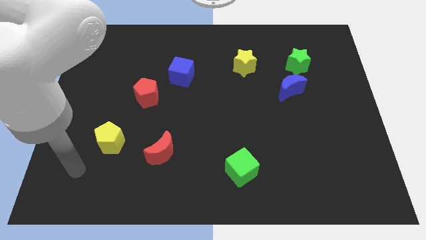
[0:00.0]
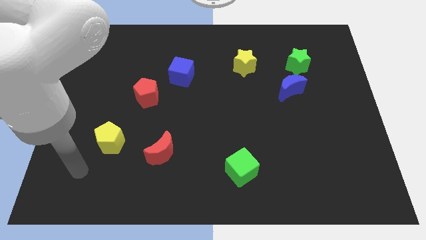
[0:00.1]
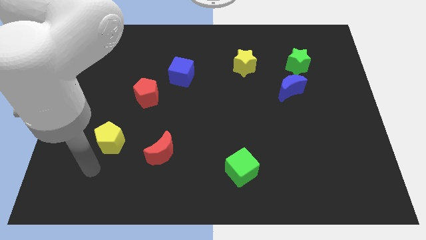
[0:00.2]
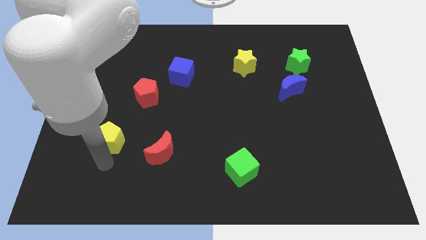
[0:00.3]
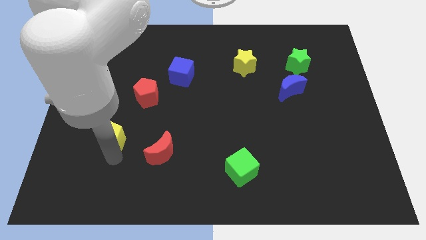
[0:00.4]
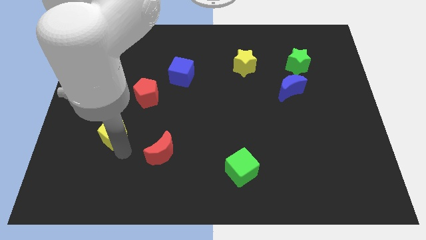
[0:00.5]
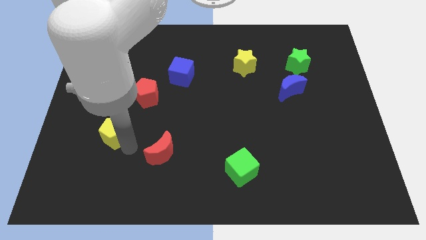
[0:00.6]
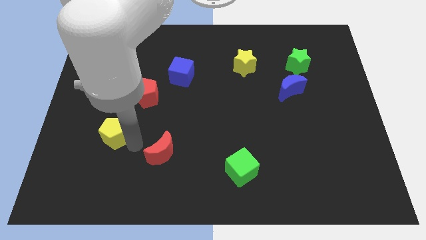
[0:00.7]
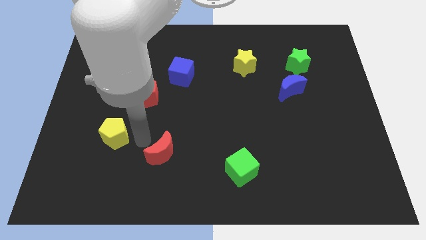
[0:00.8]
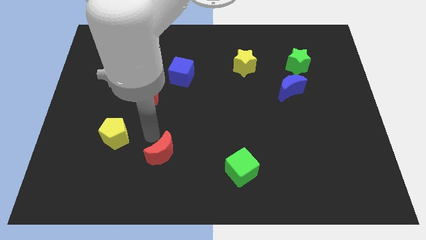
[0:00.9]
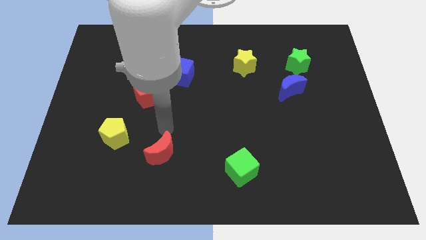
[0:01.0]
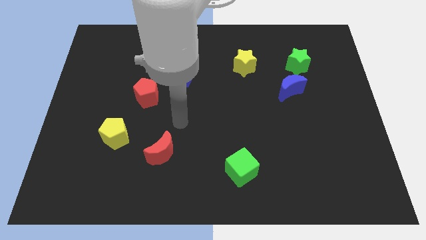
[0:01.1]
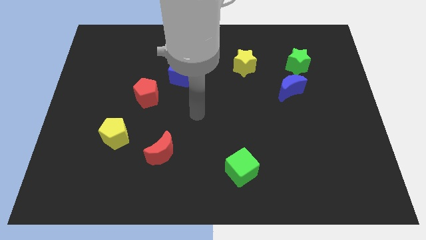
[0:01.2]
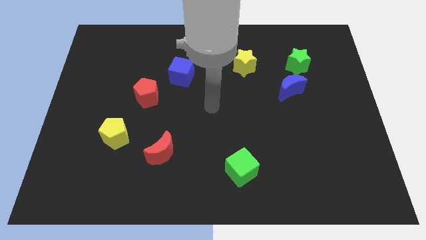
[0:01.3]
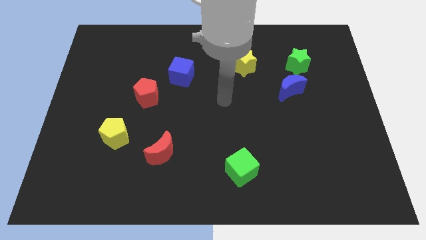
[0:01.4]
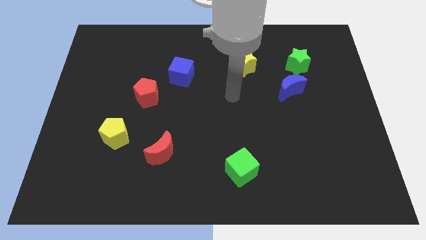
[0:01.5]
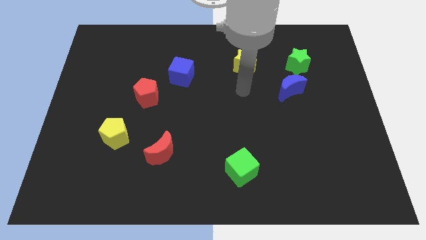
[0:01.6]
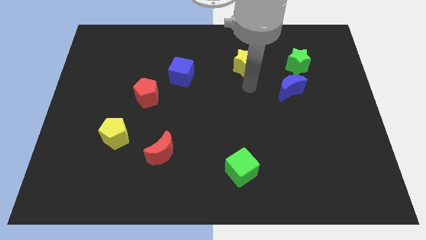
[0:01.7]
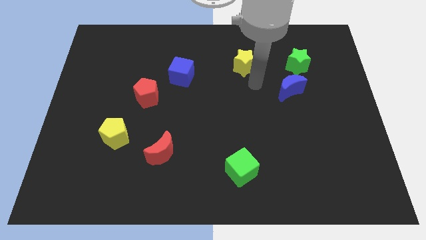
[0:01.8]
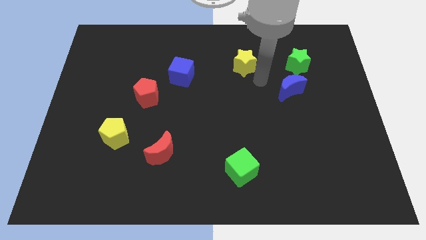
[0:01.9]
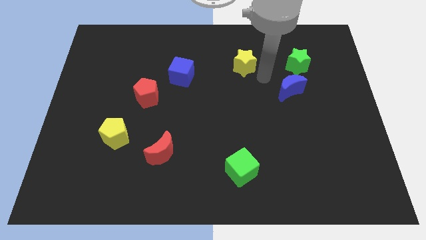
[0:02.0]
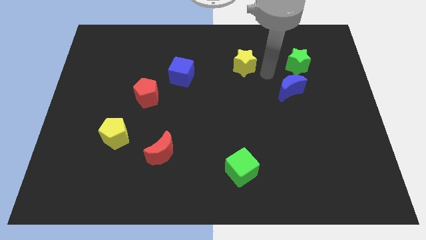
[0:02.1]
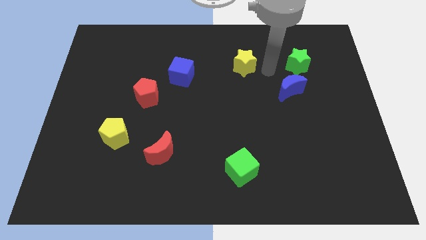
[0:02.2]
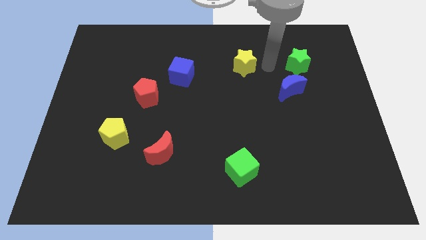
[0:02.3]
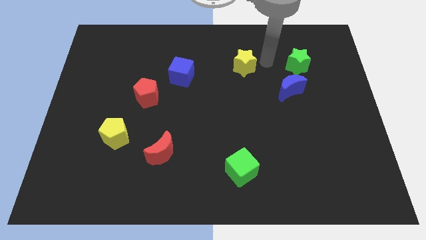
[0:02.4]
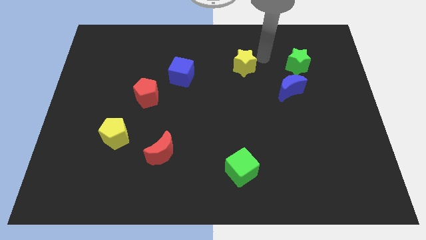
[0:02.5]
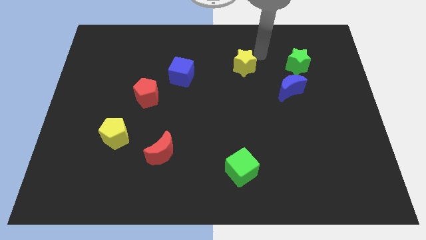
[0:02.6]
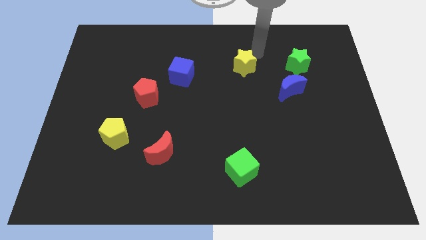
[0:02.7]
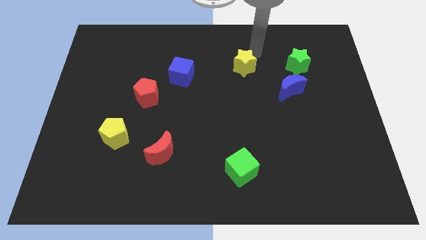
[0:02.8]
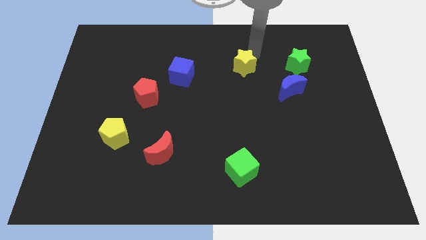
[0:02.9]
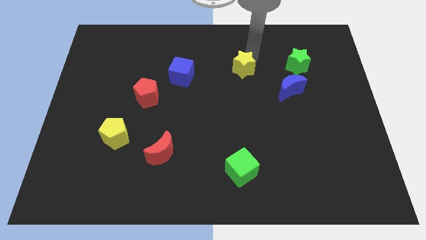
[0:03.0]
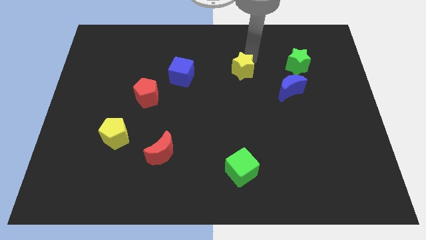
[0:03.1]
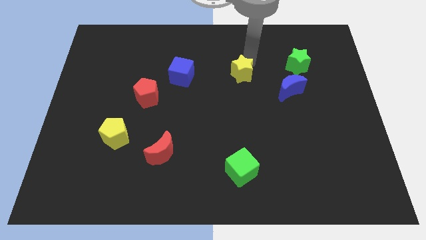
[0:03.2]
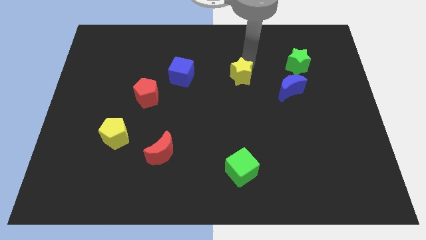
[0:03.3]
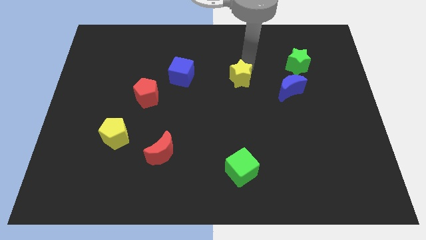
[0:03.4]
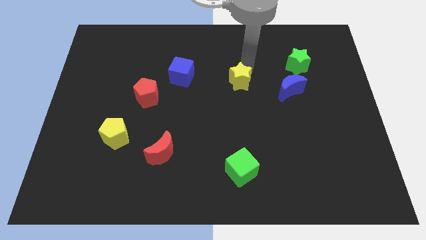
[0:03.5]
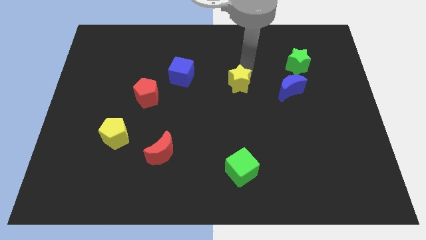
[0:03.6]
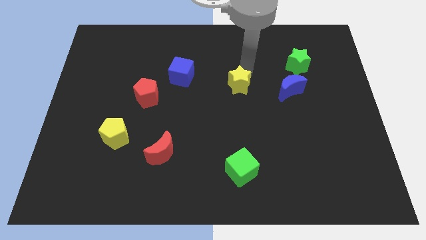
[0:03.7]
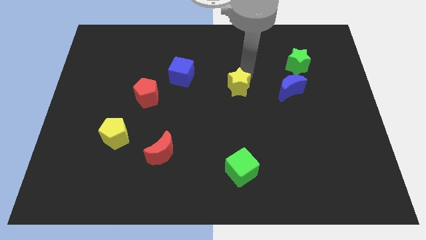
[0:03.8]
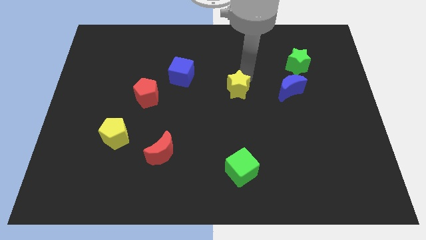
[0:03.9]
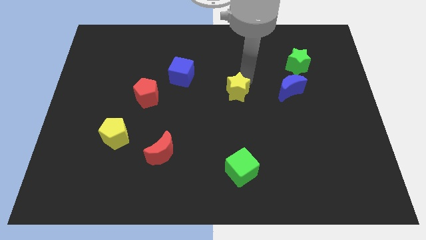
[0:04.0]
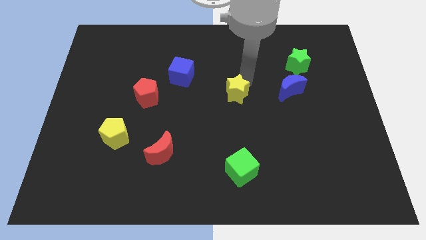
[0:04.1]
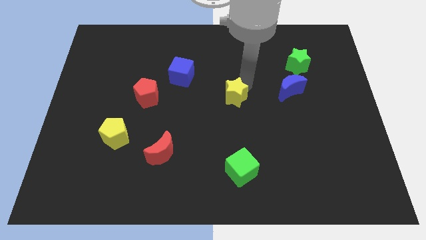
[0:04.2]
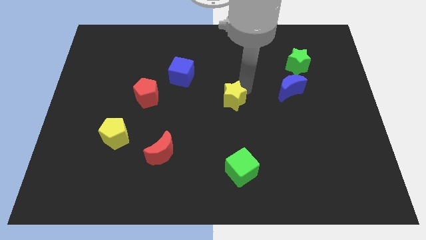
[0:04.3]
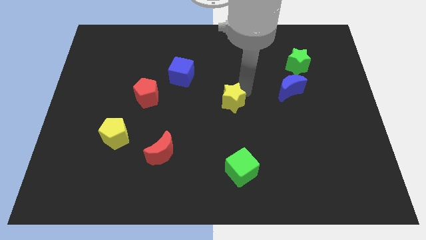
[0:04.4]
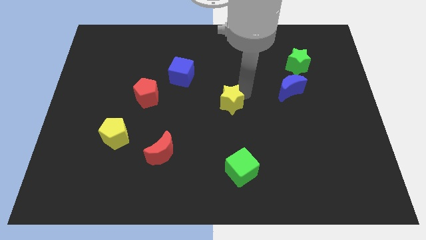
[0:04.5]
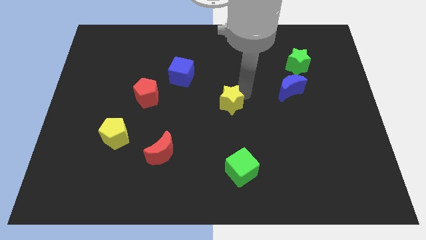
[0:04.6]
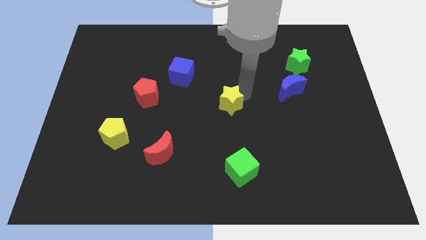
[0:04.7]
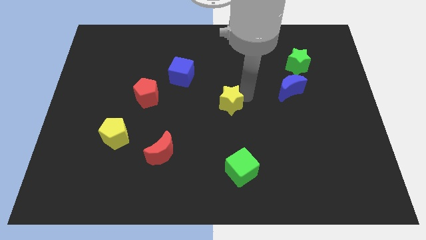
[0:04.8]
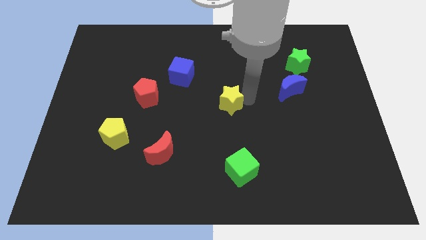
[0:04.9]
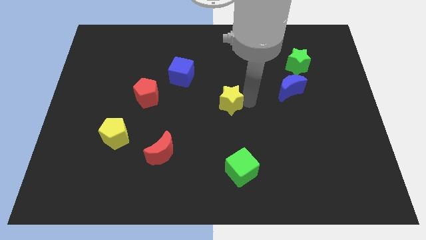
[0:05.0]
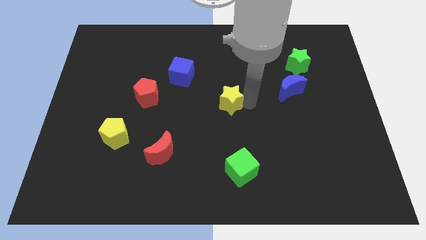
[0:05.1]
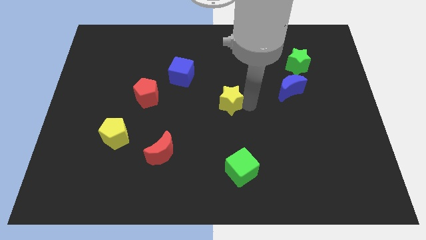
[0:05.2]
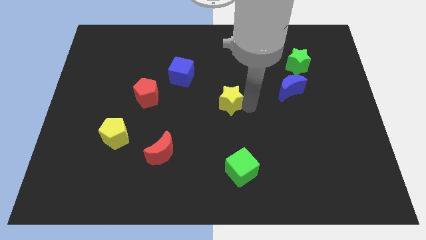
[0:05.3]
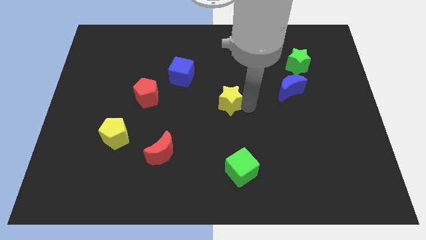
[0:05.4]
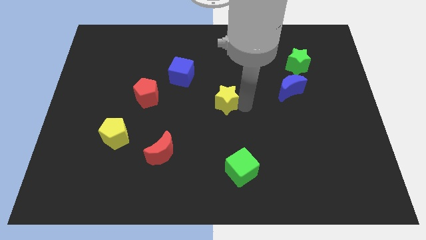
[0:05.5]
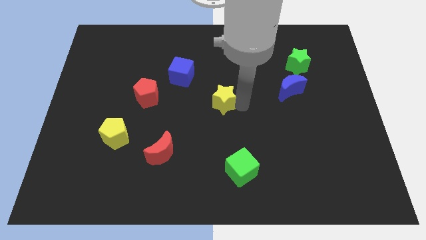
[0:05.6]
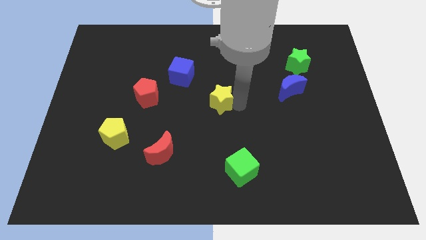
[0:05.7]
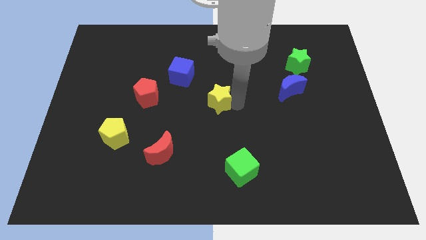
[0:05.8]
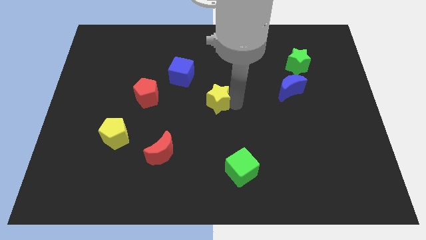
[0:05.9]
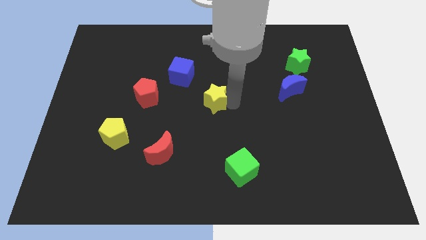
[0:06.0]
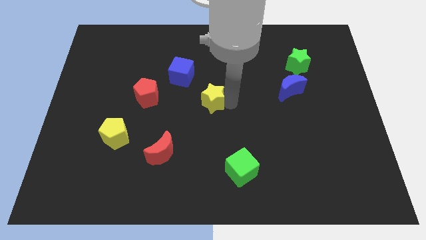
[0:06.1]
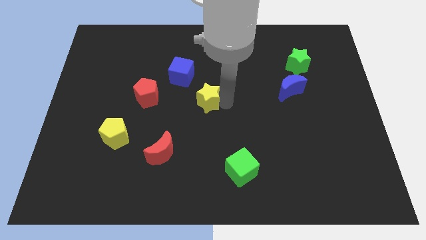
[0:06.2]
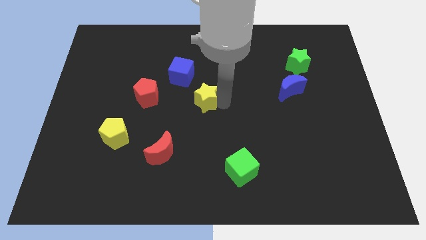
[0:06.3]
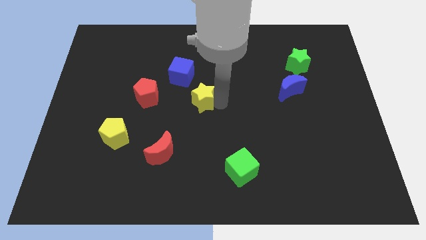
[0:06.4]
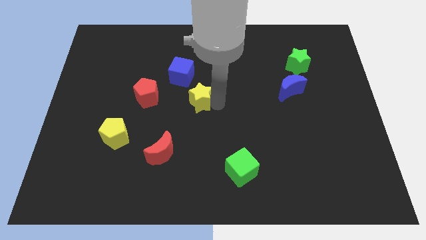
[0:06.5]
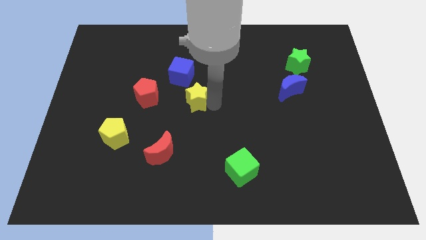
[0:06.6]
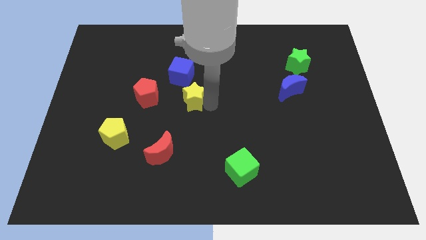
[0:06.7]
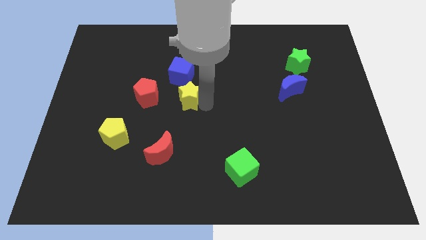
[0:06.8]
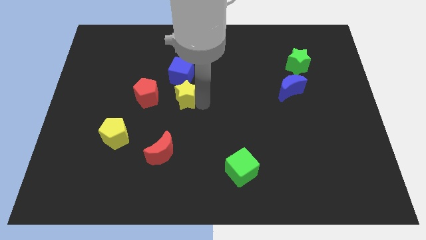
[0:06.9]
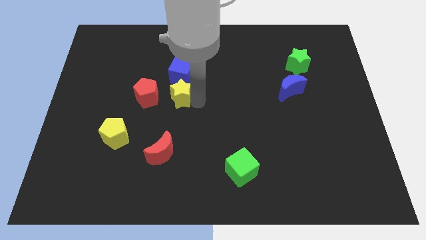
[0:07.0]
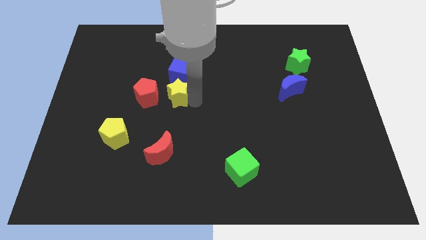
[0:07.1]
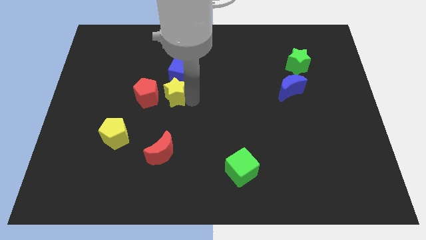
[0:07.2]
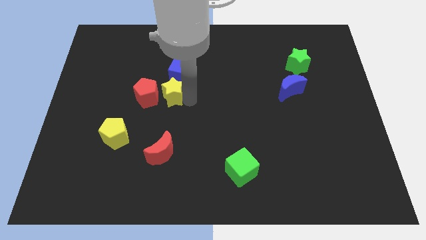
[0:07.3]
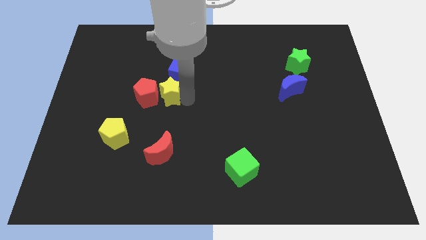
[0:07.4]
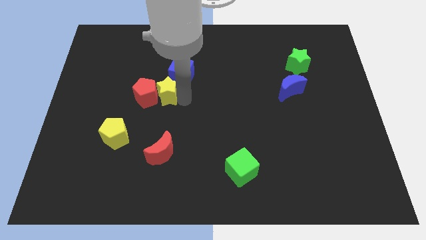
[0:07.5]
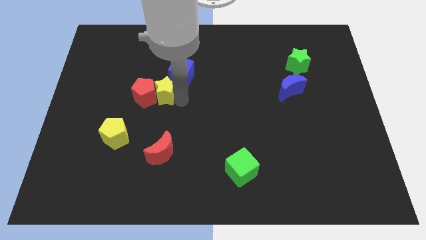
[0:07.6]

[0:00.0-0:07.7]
push the yellow star close to the red pentagon

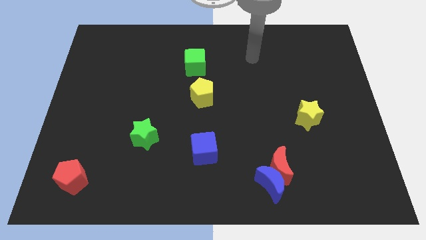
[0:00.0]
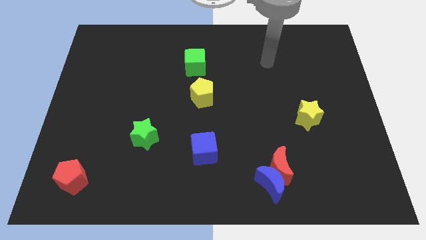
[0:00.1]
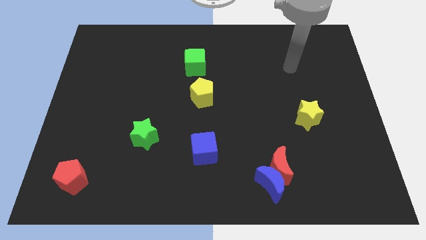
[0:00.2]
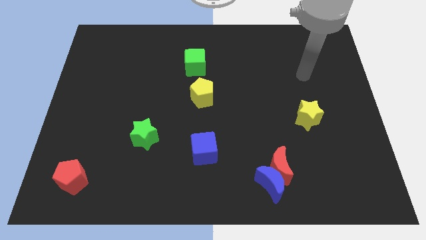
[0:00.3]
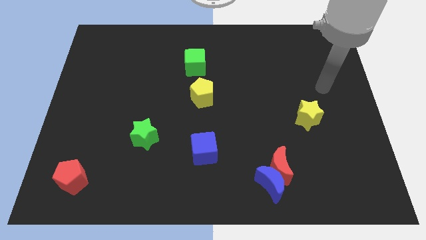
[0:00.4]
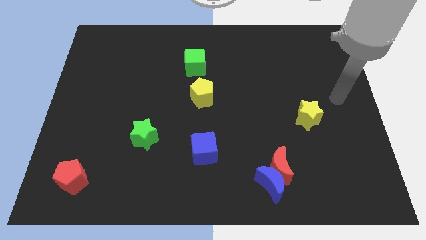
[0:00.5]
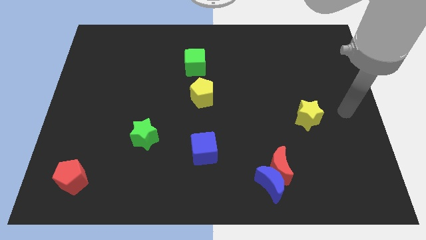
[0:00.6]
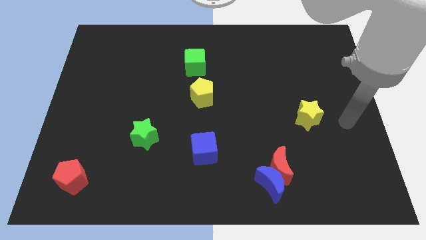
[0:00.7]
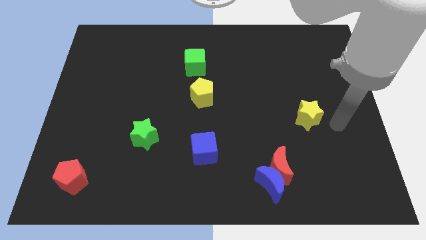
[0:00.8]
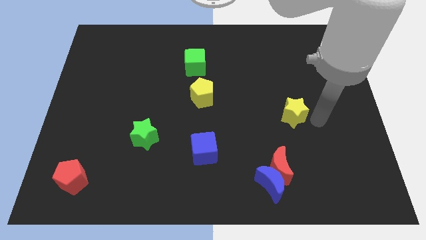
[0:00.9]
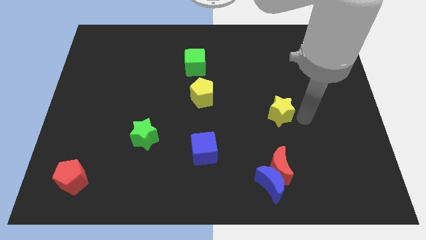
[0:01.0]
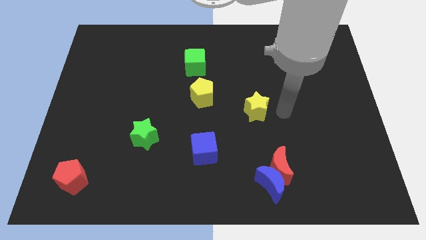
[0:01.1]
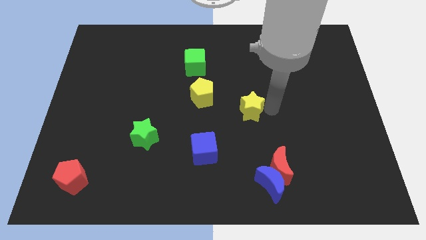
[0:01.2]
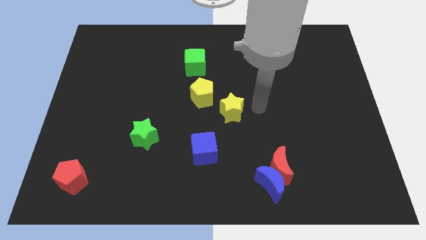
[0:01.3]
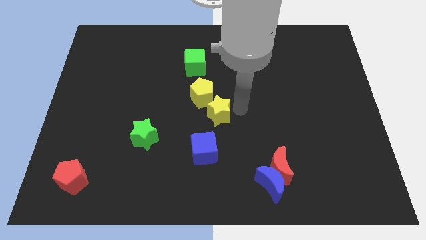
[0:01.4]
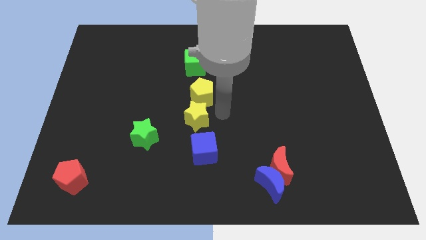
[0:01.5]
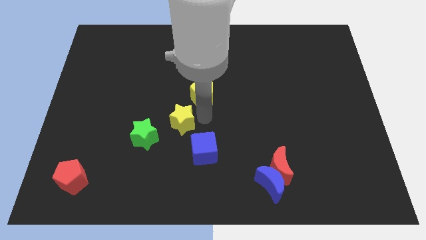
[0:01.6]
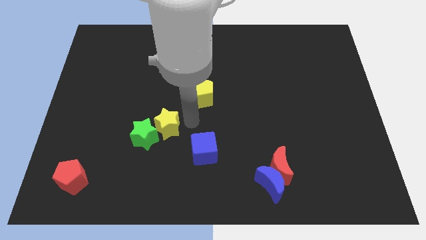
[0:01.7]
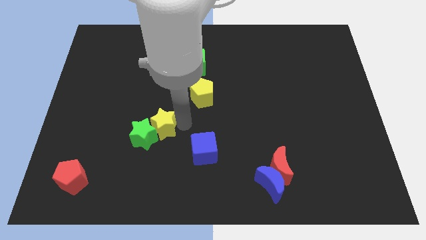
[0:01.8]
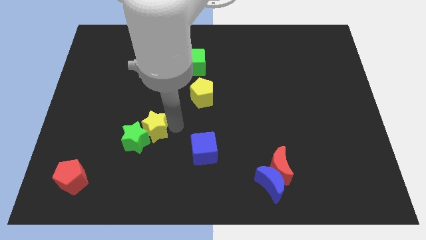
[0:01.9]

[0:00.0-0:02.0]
slide the yellow star to the green star
